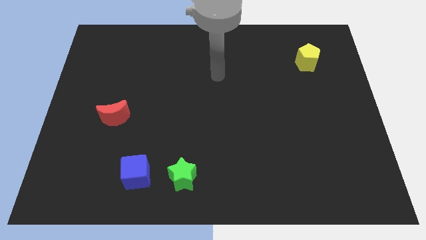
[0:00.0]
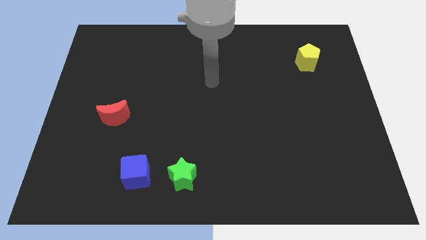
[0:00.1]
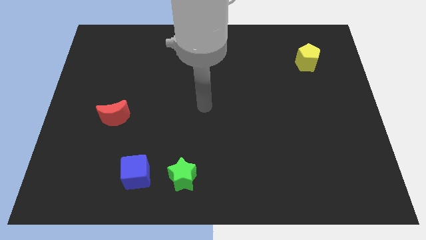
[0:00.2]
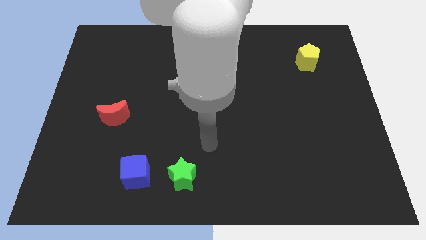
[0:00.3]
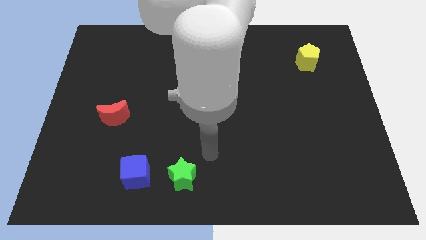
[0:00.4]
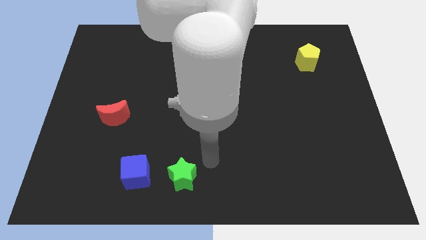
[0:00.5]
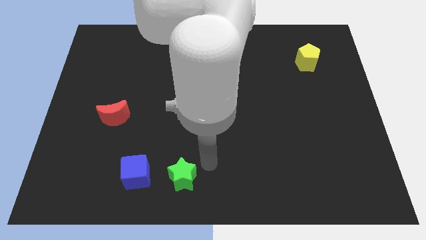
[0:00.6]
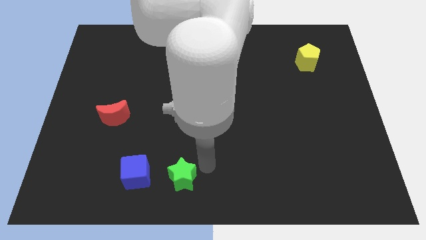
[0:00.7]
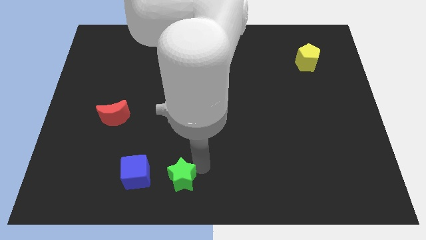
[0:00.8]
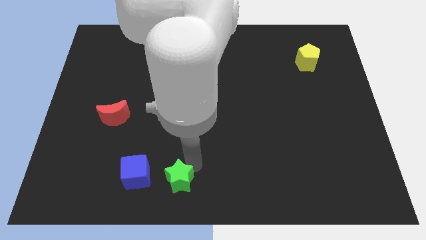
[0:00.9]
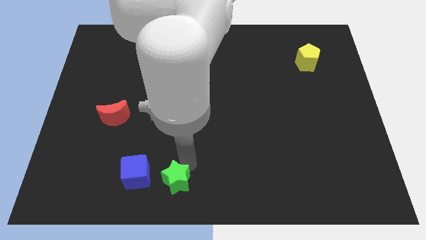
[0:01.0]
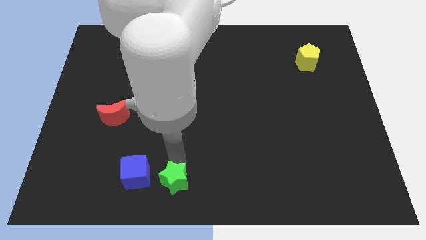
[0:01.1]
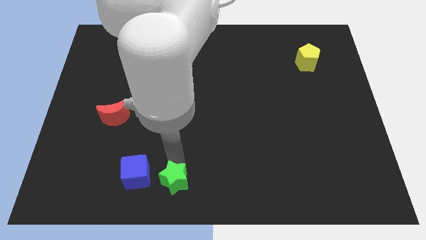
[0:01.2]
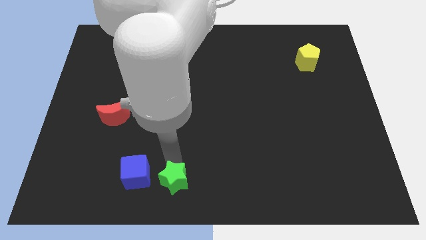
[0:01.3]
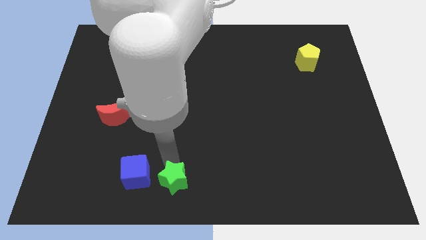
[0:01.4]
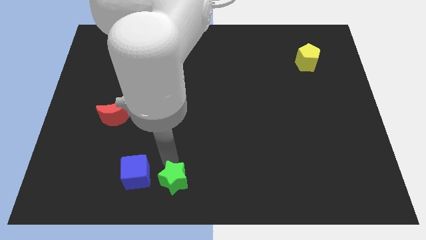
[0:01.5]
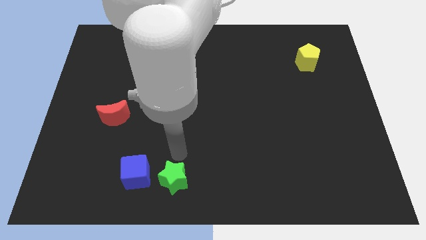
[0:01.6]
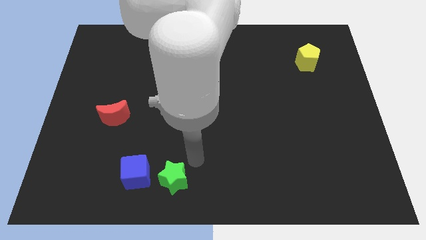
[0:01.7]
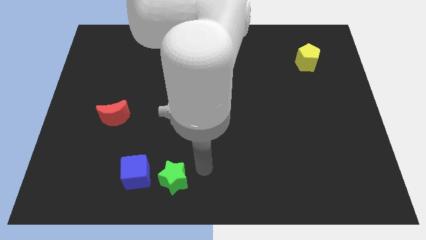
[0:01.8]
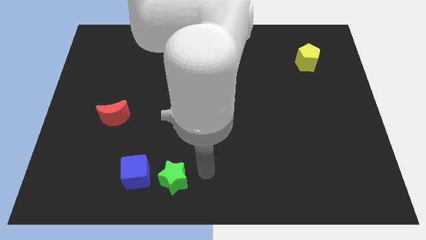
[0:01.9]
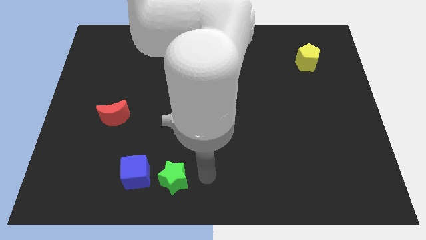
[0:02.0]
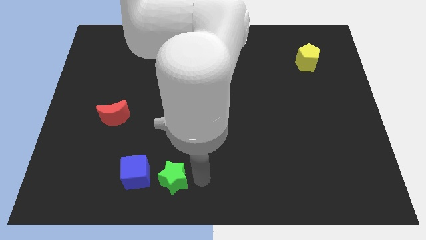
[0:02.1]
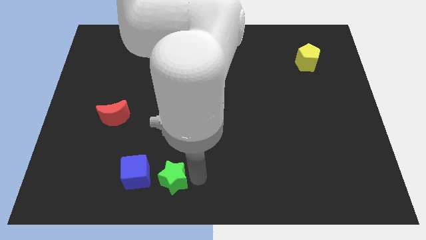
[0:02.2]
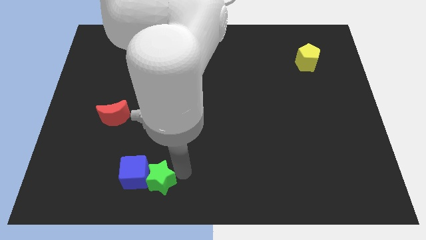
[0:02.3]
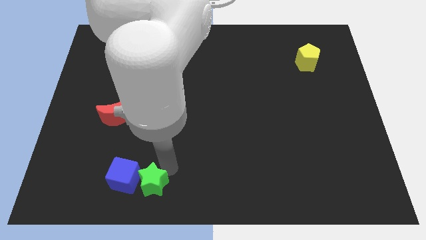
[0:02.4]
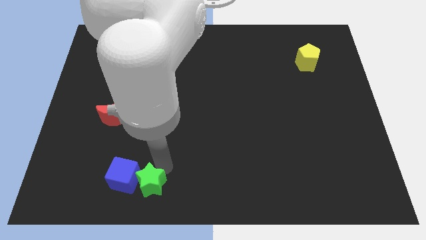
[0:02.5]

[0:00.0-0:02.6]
put the star next to the blue cube

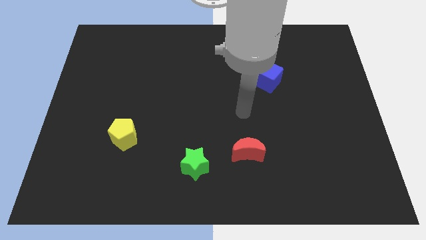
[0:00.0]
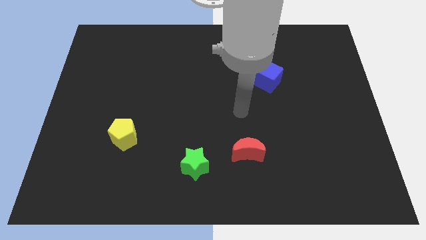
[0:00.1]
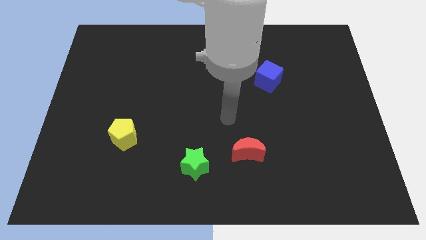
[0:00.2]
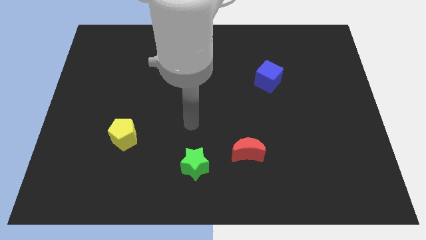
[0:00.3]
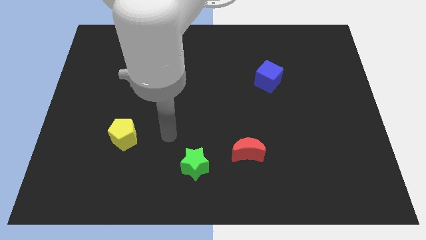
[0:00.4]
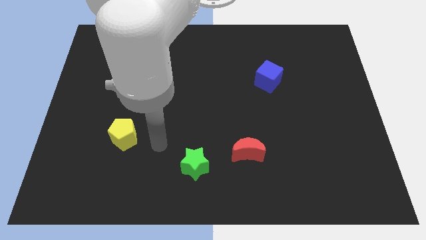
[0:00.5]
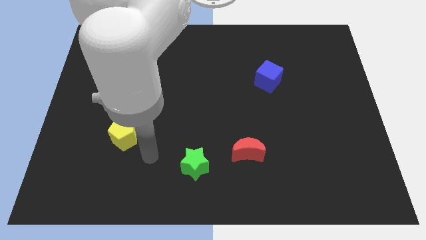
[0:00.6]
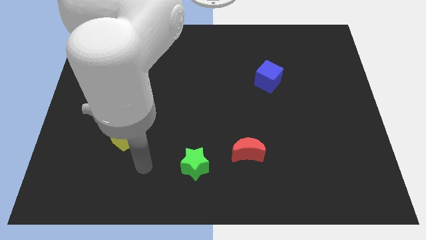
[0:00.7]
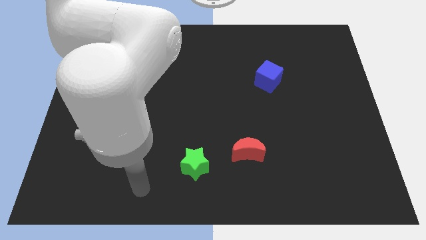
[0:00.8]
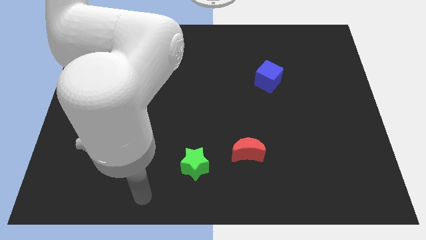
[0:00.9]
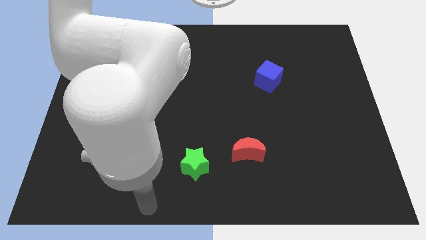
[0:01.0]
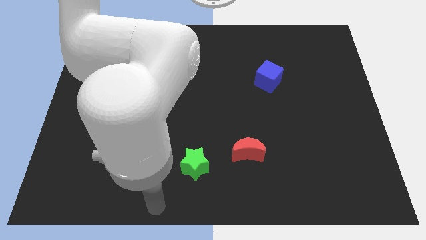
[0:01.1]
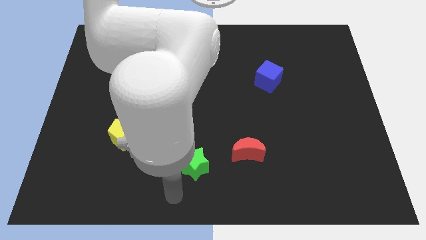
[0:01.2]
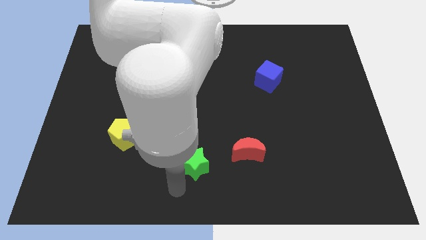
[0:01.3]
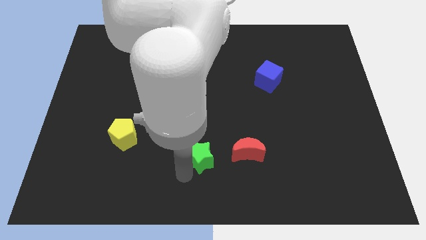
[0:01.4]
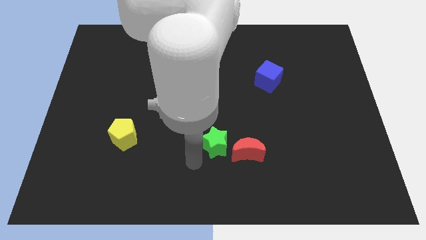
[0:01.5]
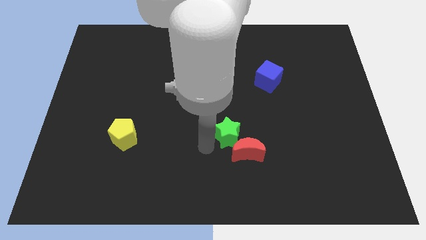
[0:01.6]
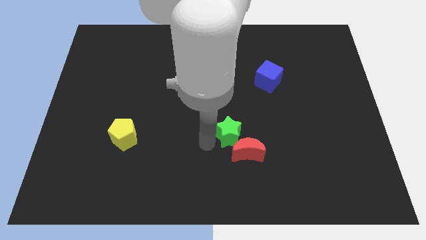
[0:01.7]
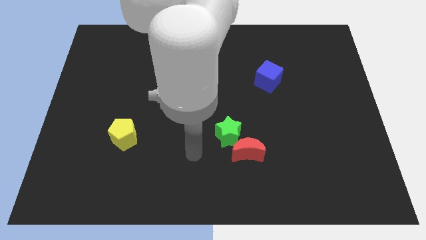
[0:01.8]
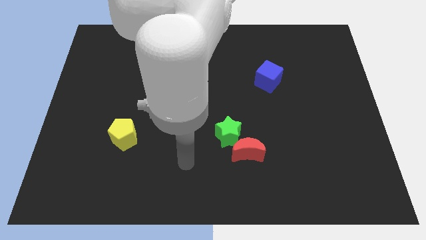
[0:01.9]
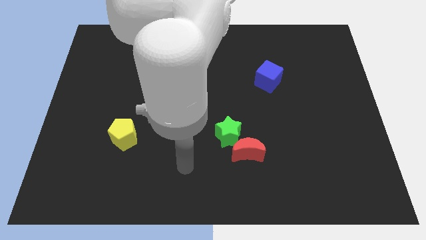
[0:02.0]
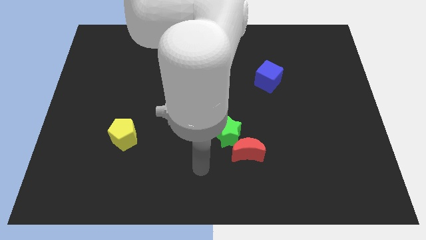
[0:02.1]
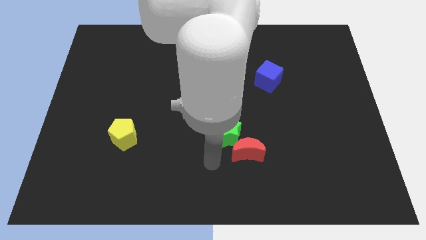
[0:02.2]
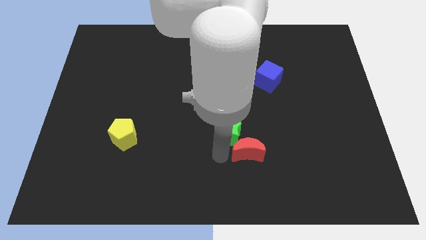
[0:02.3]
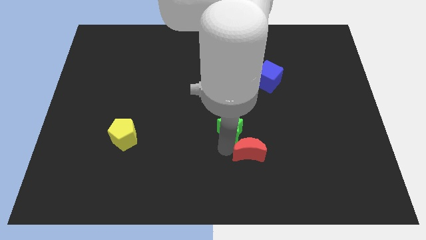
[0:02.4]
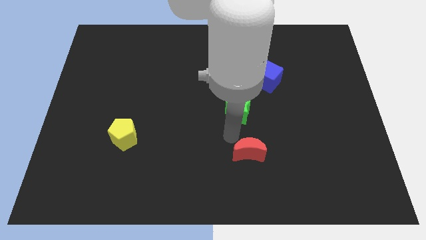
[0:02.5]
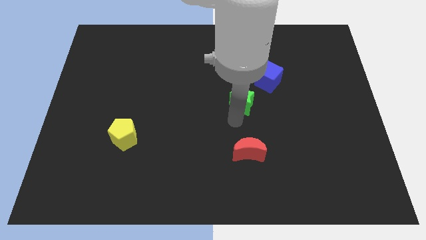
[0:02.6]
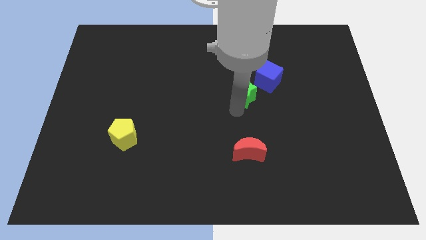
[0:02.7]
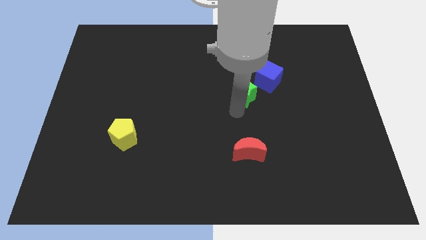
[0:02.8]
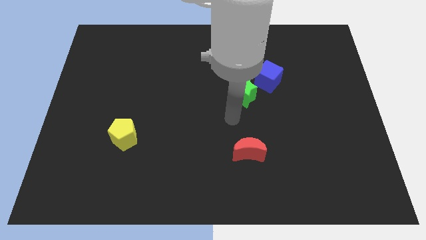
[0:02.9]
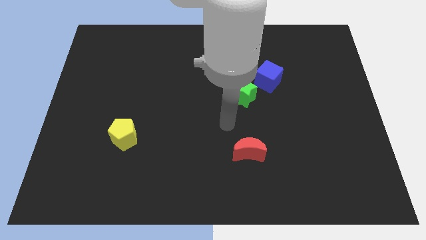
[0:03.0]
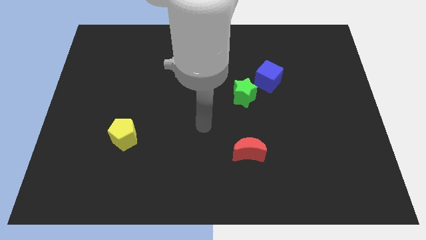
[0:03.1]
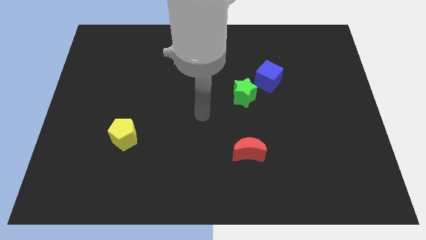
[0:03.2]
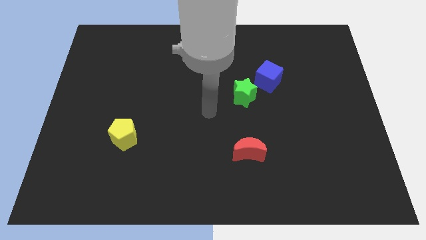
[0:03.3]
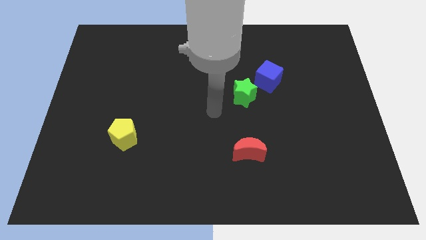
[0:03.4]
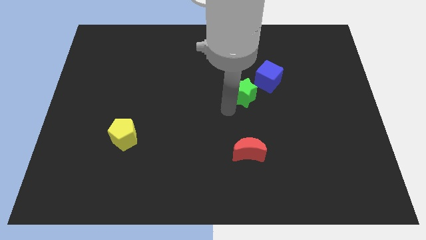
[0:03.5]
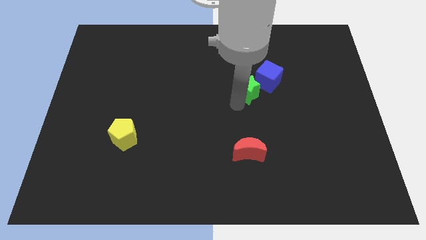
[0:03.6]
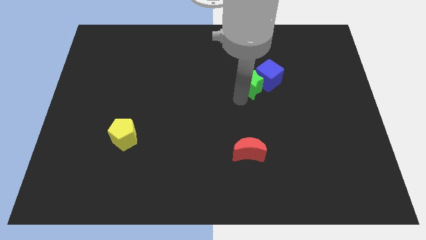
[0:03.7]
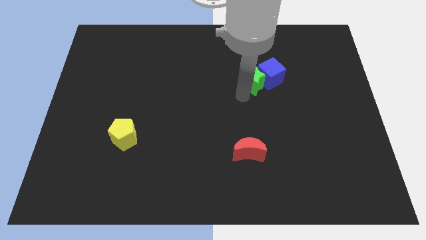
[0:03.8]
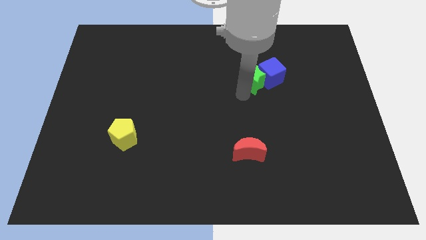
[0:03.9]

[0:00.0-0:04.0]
move the green block next to the cube

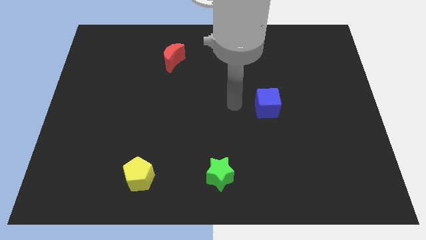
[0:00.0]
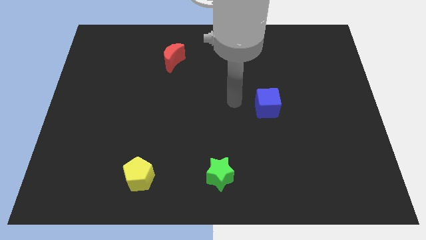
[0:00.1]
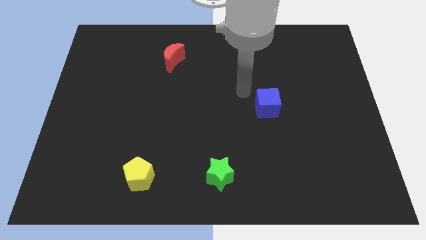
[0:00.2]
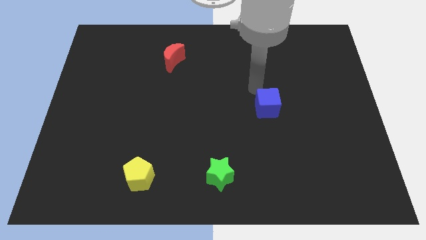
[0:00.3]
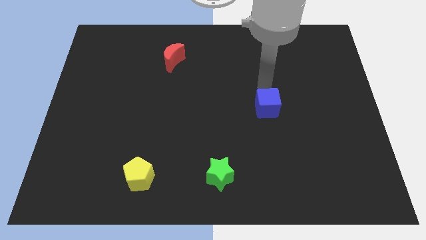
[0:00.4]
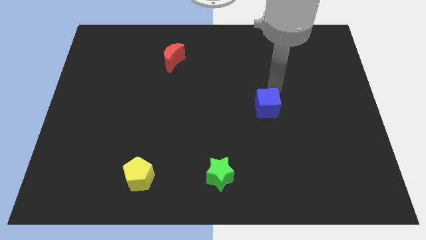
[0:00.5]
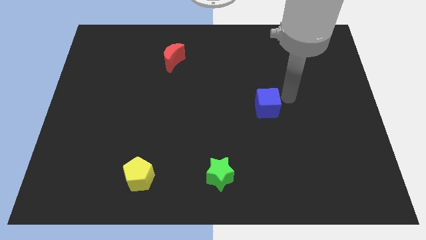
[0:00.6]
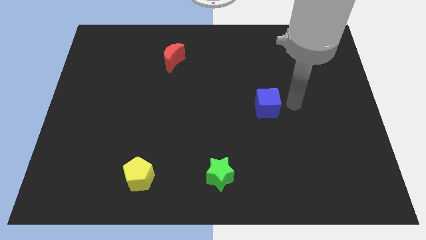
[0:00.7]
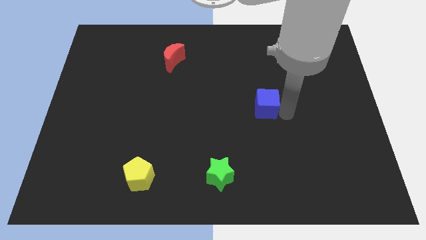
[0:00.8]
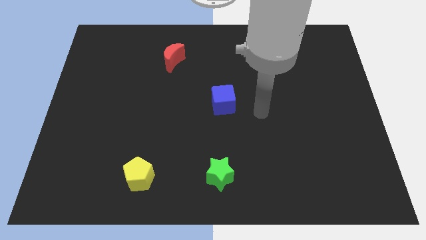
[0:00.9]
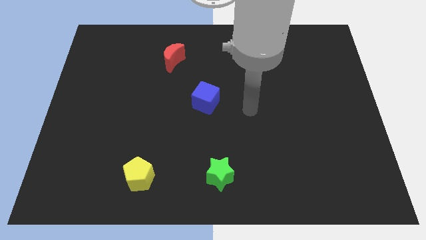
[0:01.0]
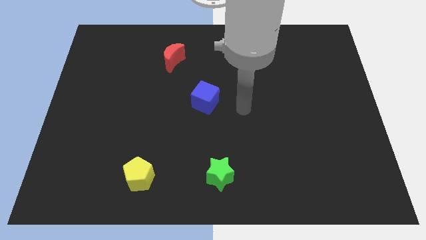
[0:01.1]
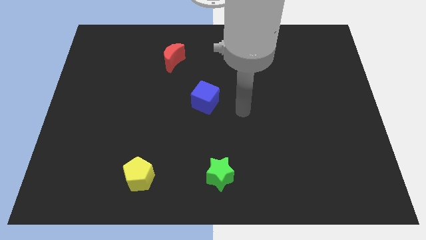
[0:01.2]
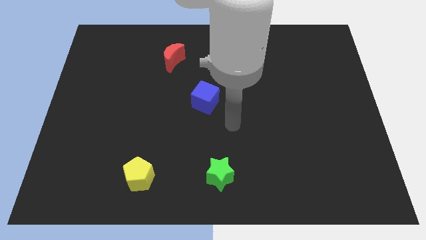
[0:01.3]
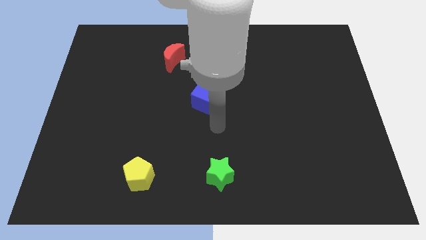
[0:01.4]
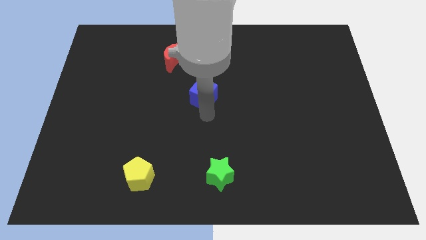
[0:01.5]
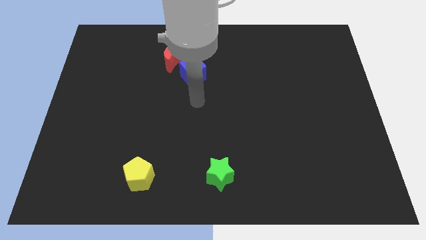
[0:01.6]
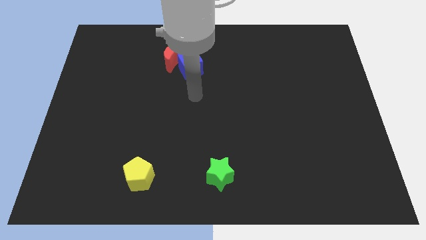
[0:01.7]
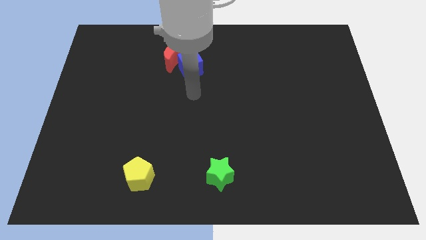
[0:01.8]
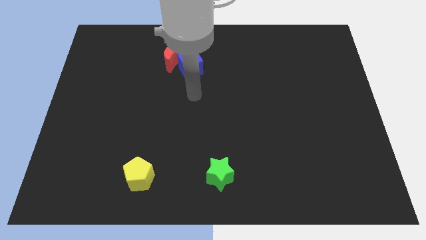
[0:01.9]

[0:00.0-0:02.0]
move the blue block next to the red moon
